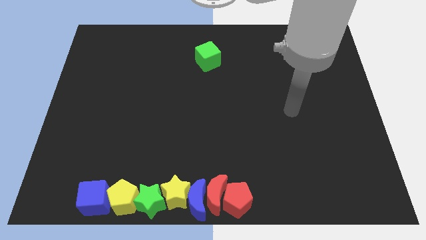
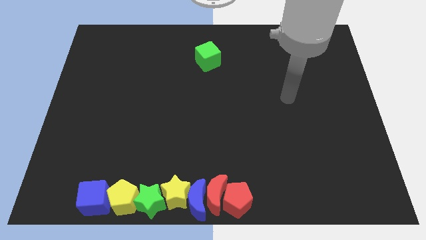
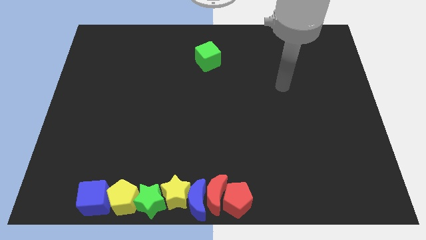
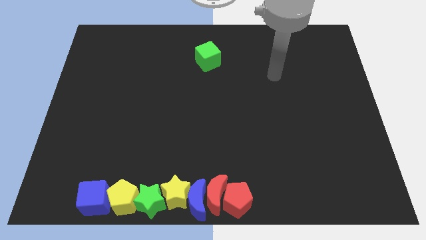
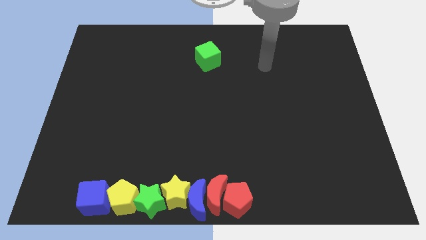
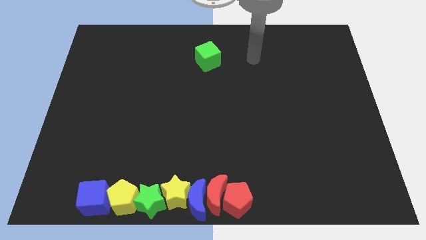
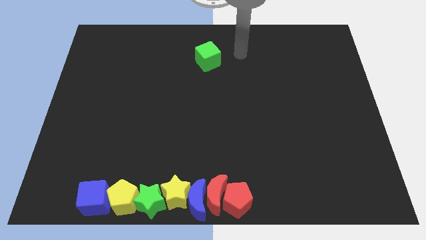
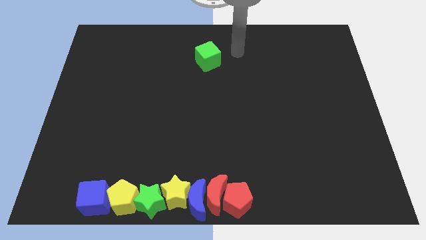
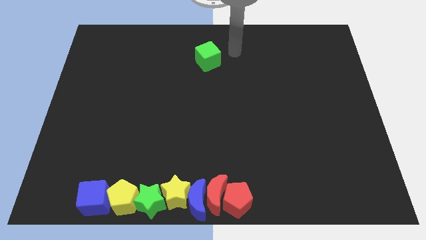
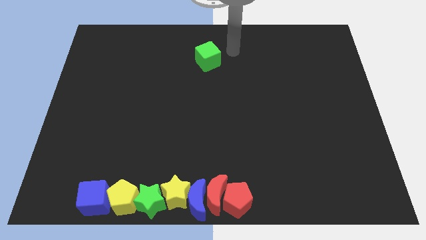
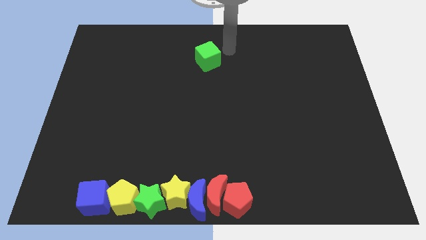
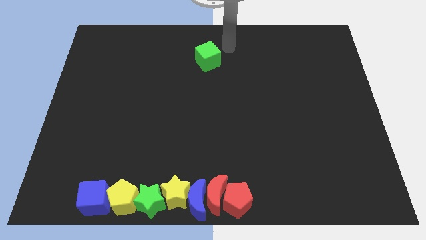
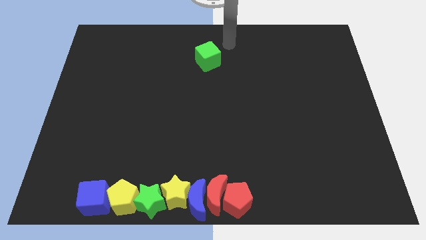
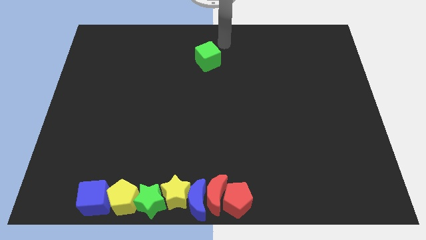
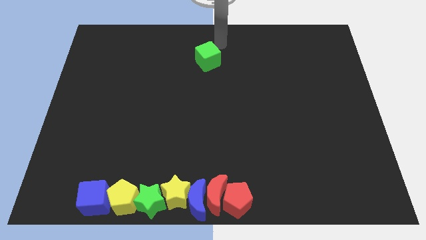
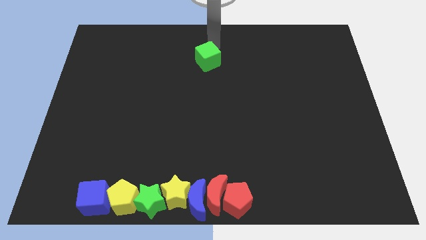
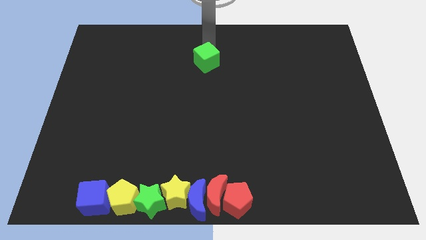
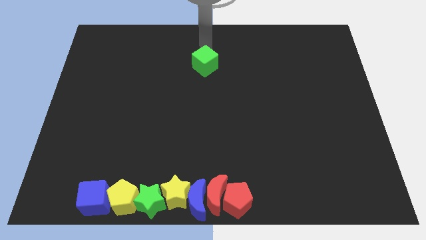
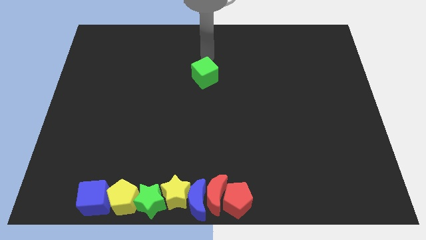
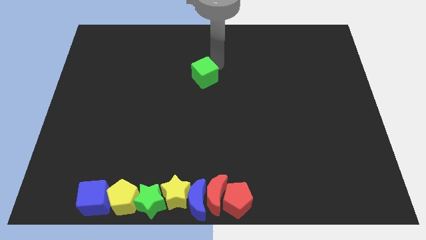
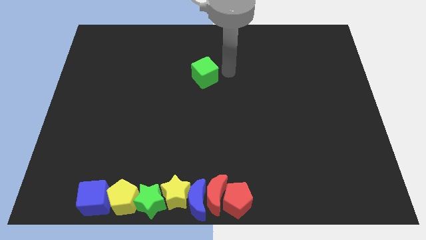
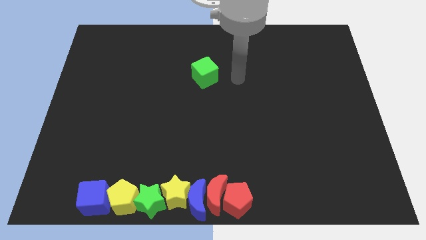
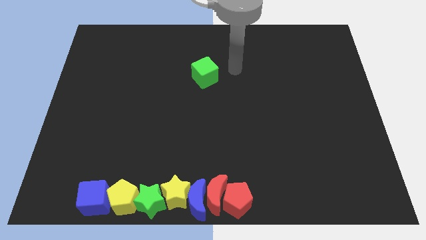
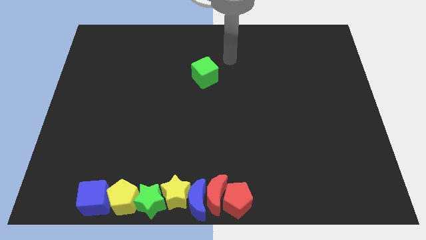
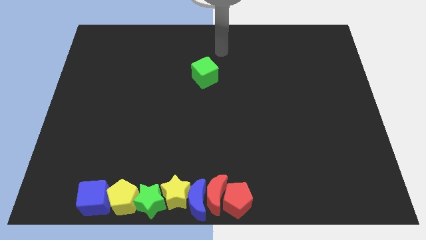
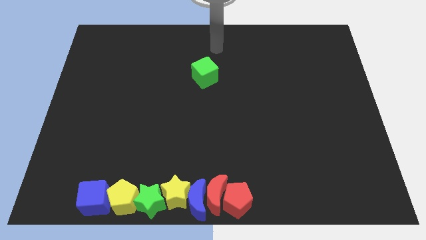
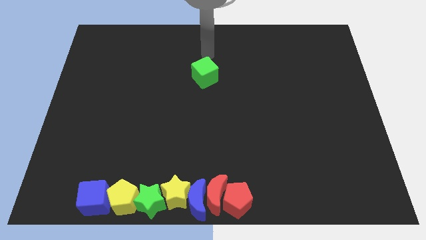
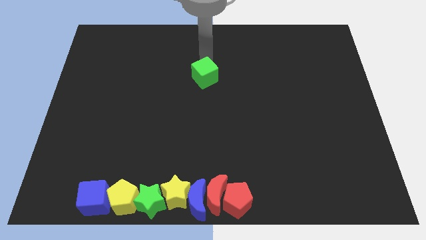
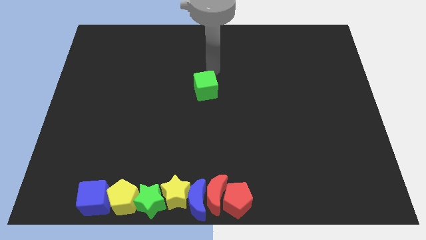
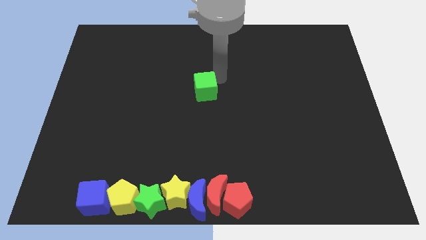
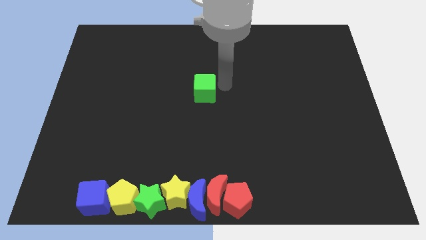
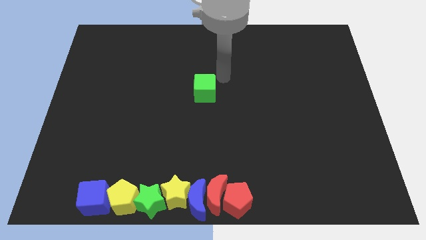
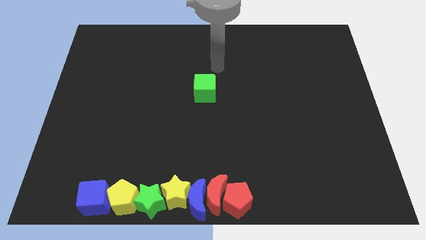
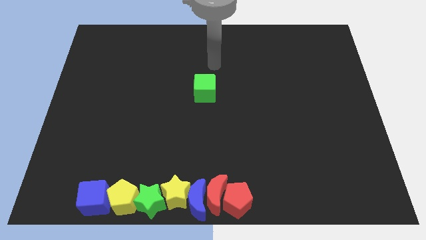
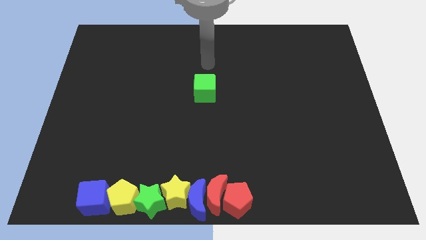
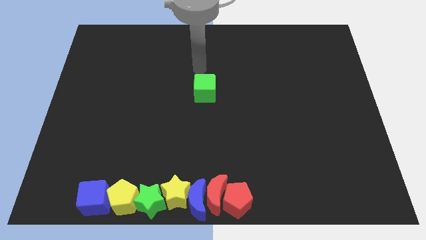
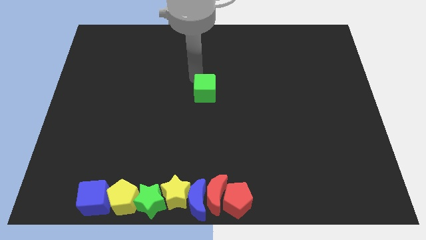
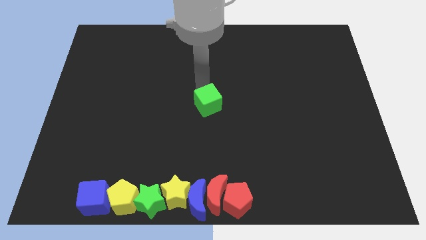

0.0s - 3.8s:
slide green cube to the center of the board

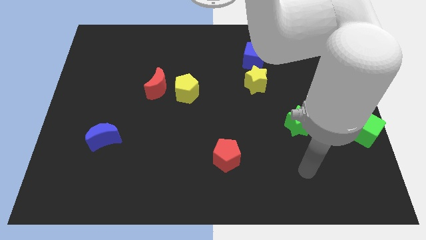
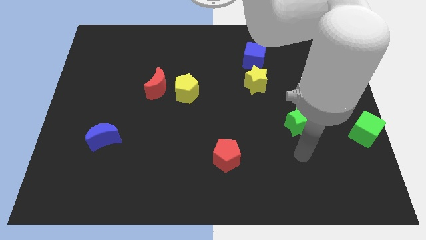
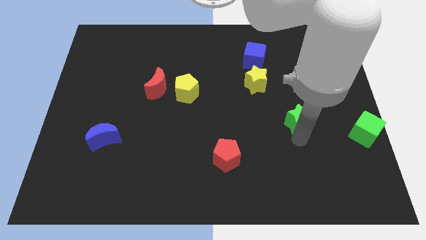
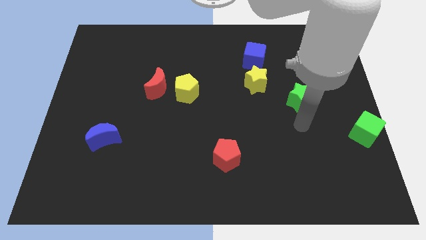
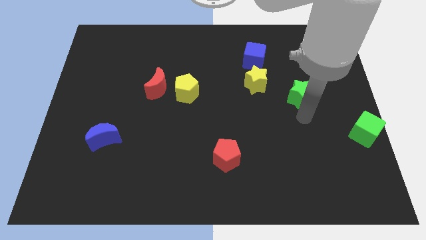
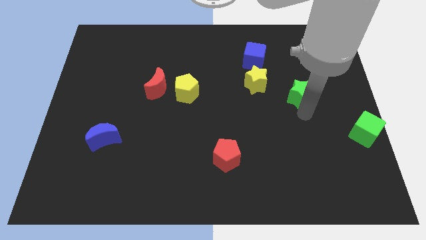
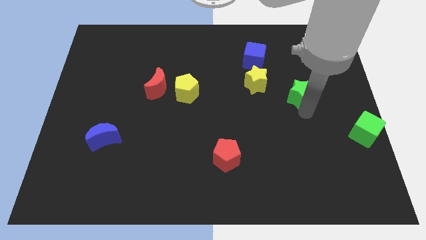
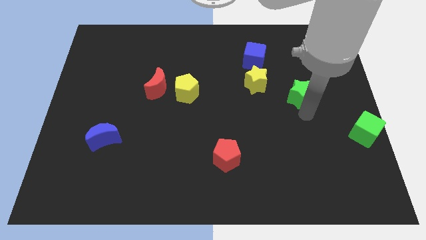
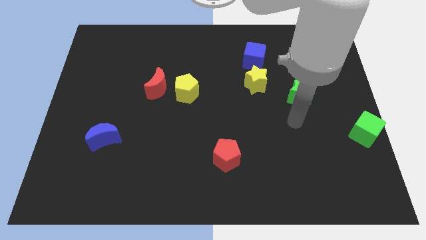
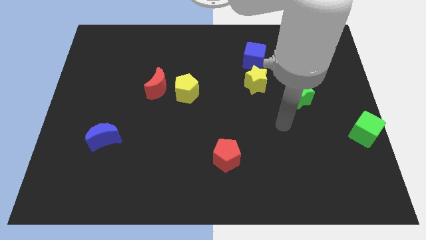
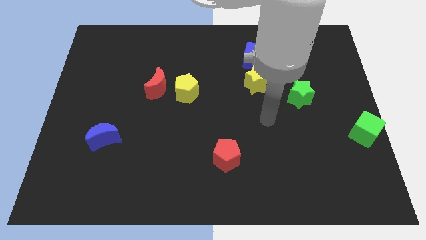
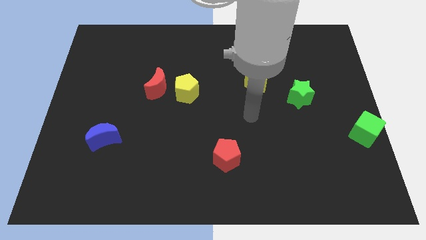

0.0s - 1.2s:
place green star upwards

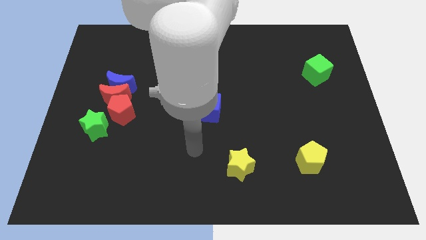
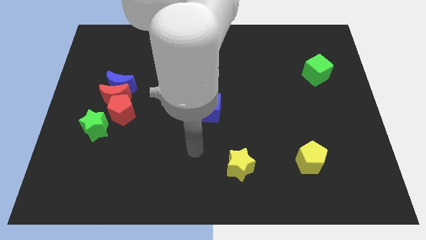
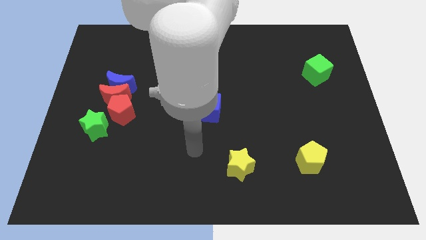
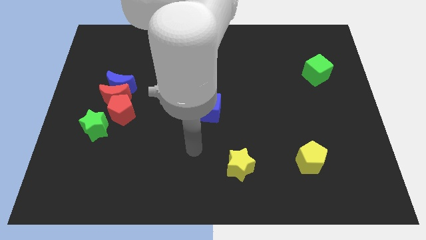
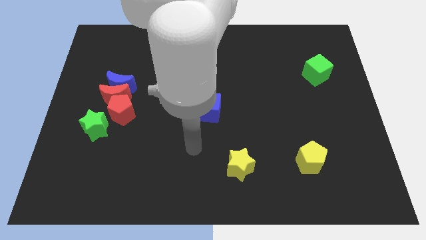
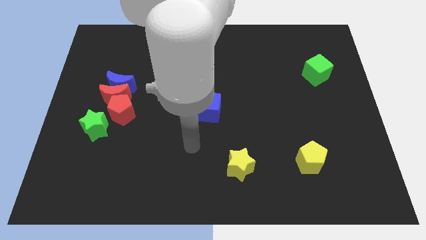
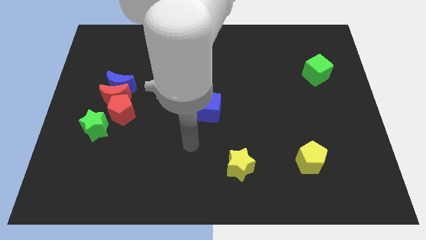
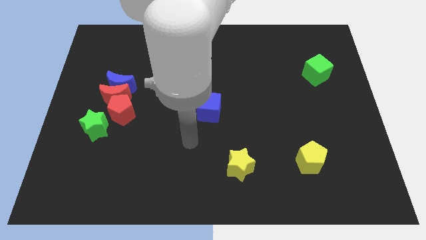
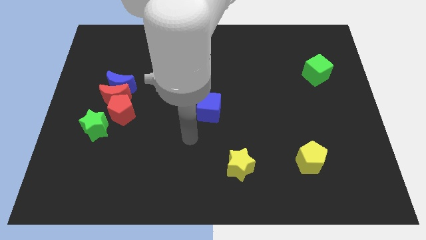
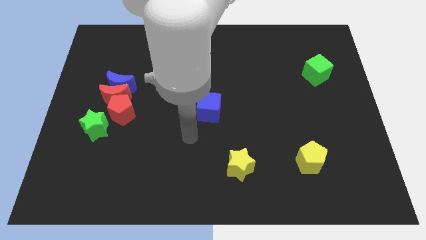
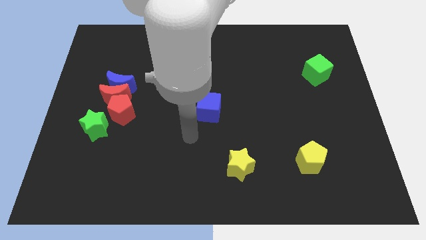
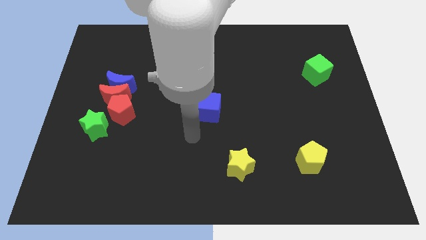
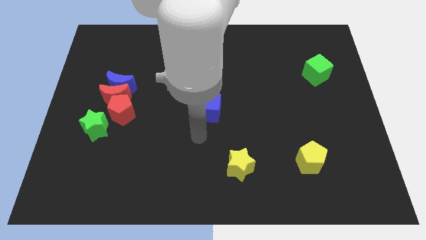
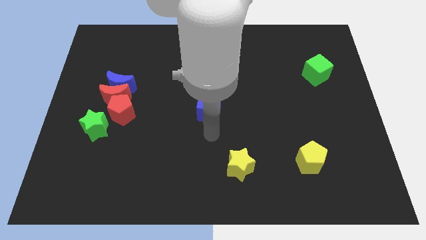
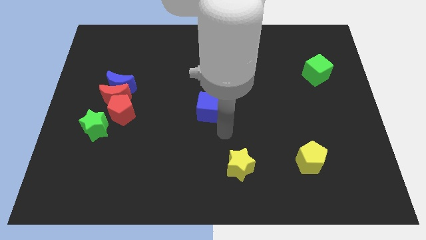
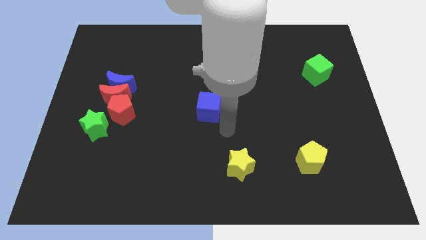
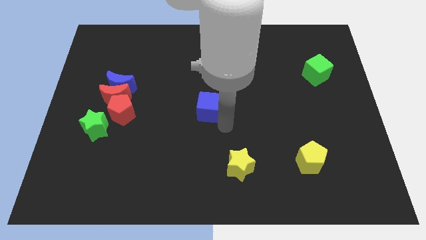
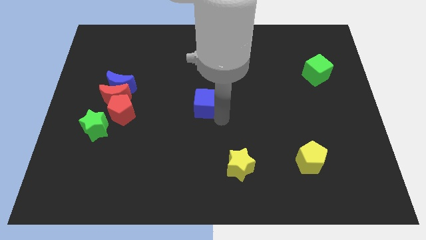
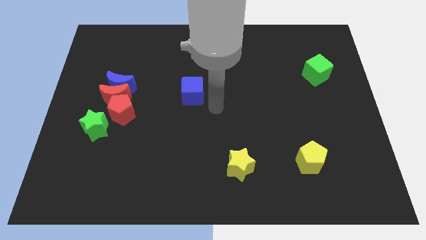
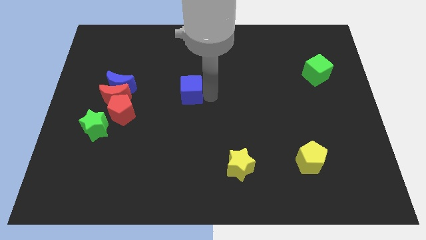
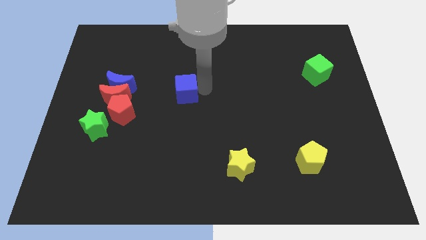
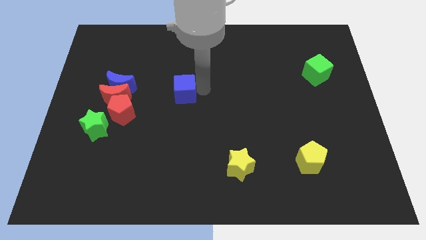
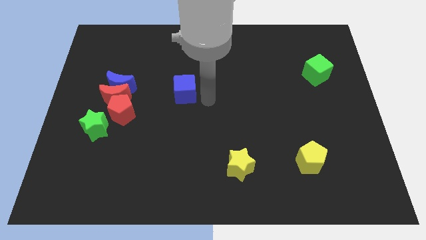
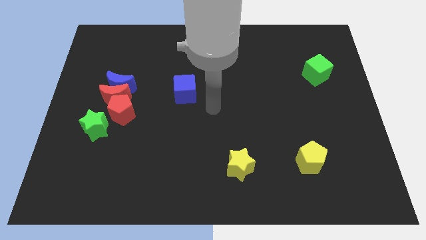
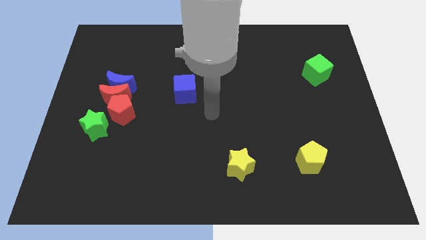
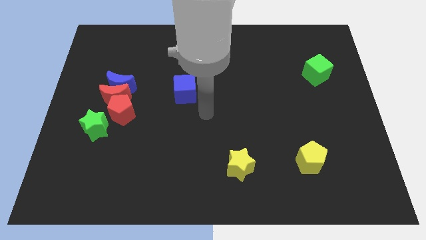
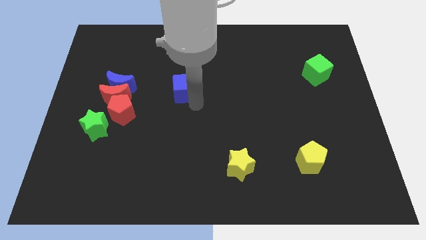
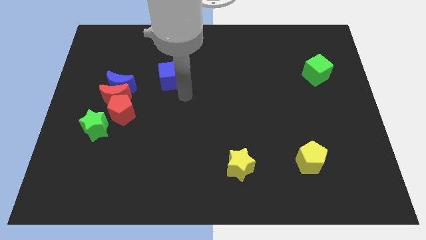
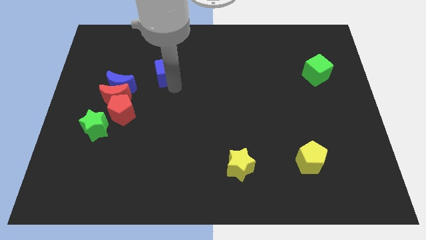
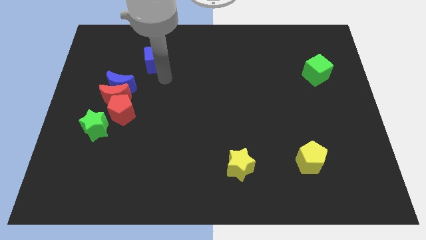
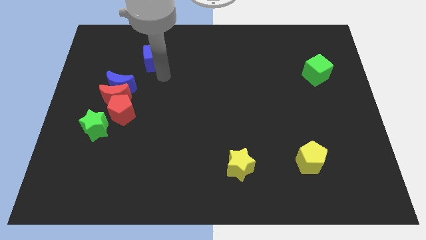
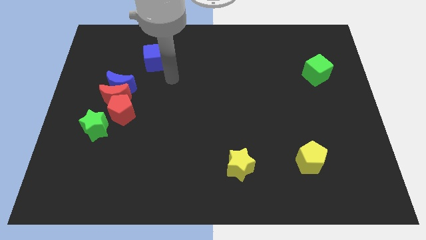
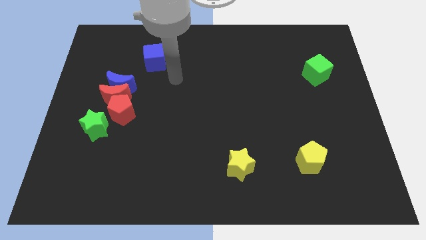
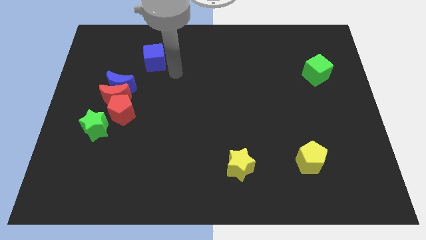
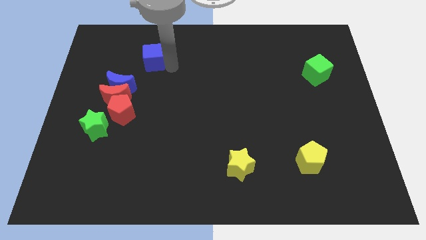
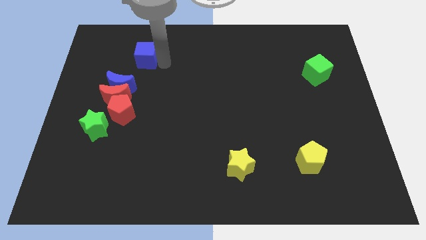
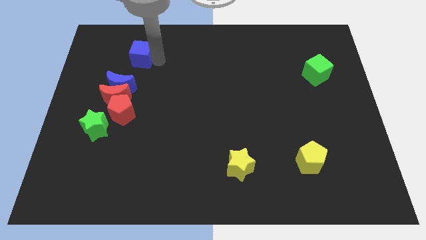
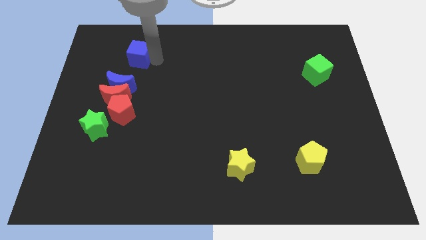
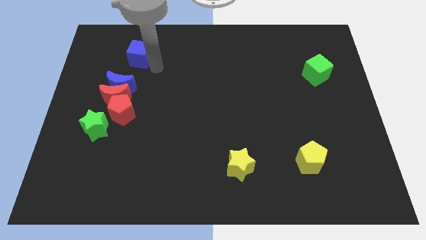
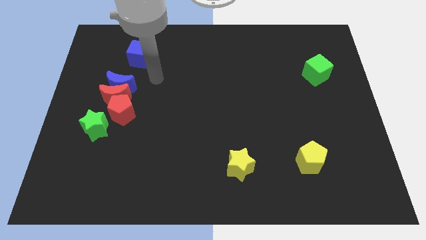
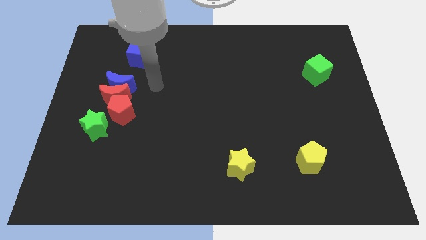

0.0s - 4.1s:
push the blue cube towards the top of blue crescent

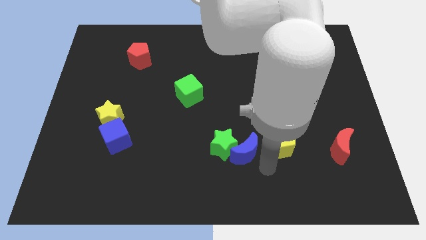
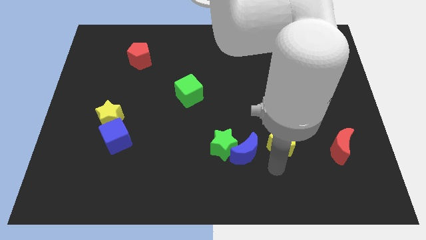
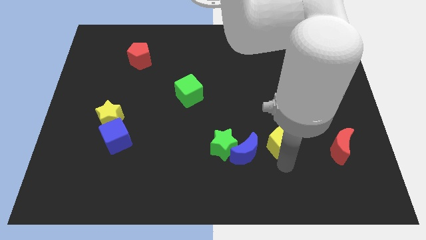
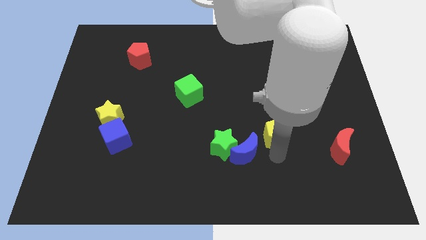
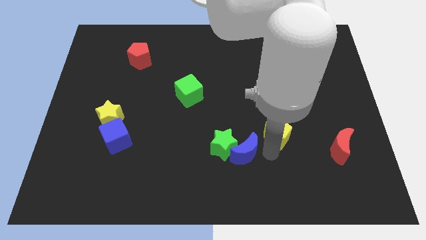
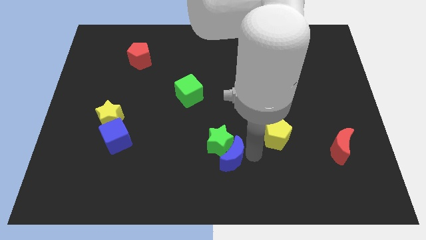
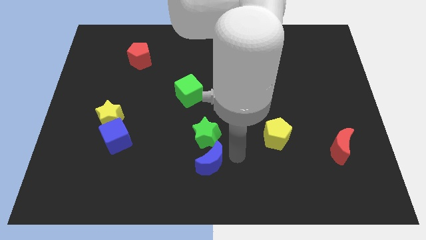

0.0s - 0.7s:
push the blue crescent into the green star
